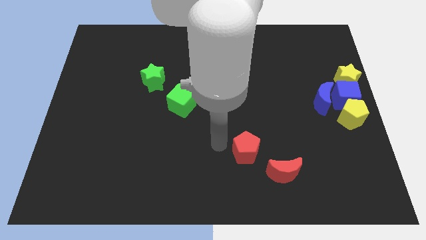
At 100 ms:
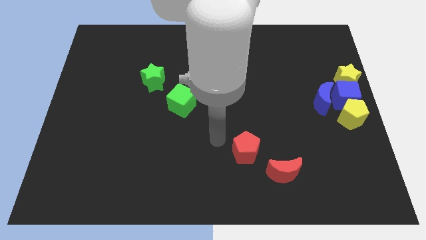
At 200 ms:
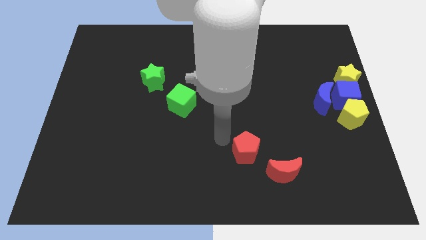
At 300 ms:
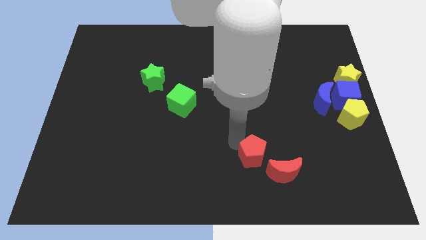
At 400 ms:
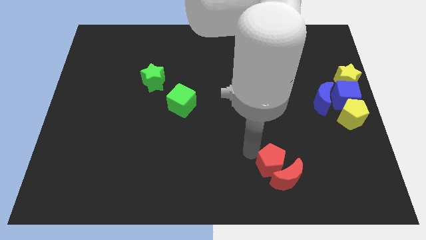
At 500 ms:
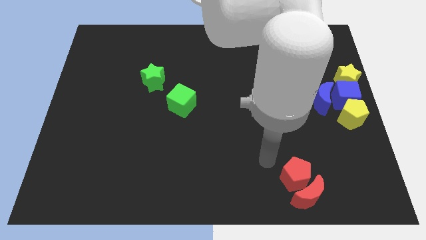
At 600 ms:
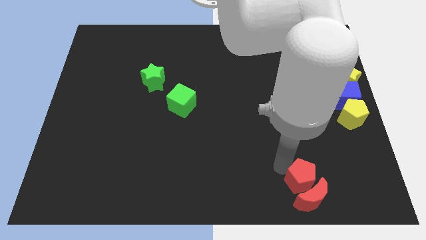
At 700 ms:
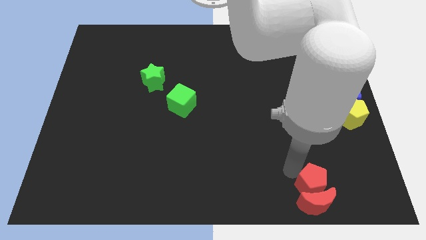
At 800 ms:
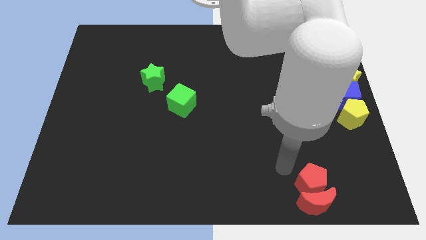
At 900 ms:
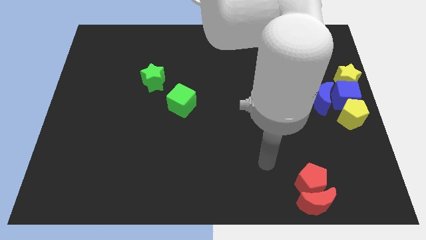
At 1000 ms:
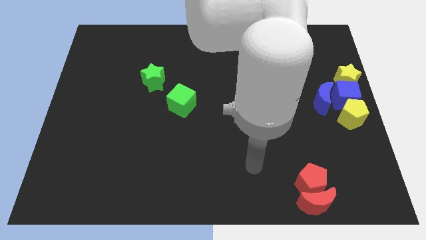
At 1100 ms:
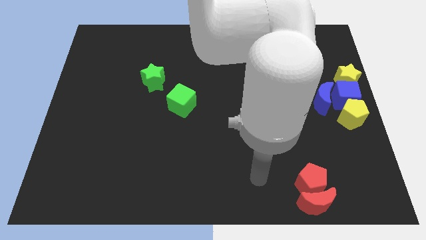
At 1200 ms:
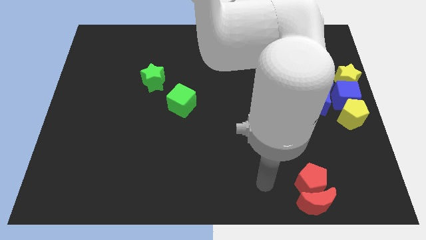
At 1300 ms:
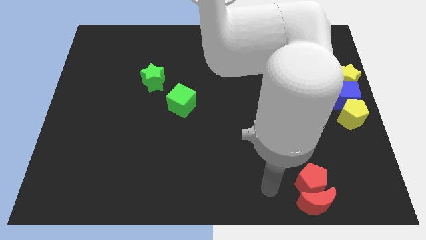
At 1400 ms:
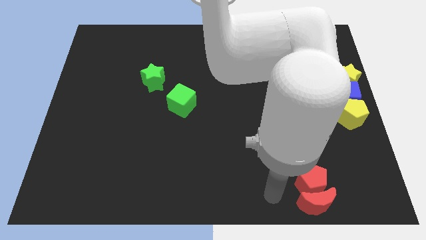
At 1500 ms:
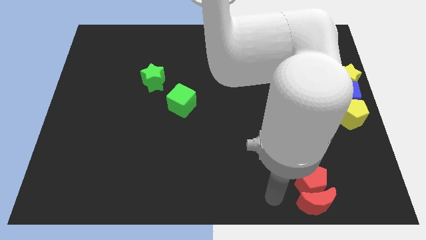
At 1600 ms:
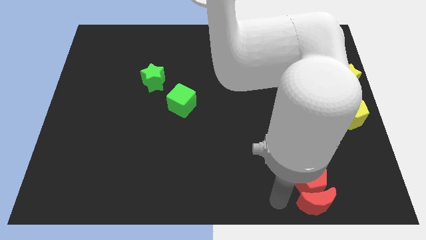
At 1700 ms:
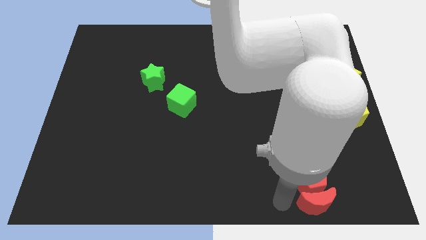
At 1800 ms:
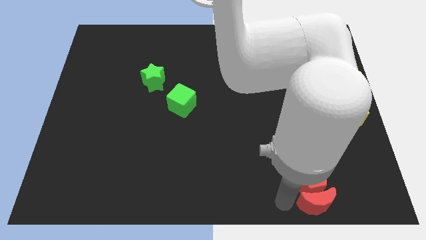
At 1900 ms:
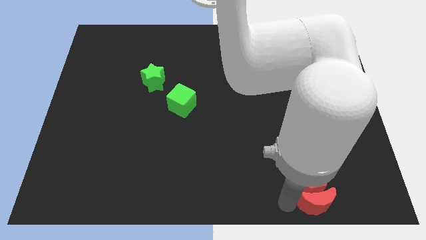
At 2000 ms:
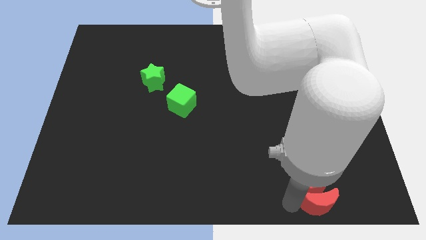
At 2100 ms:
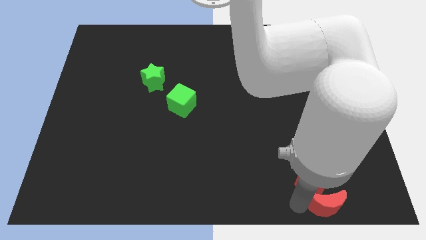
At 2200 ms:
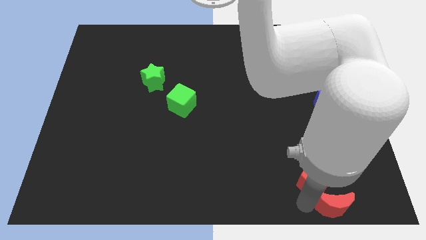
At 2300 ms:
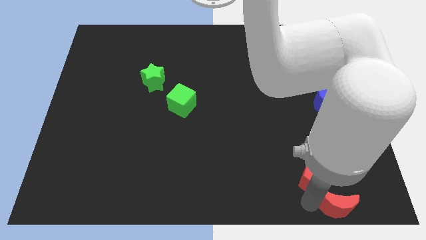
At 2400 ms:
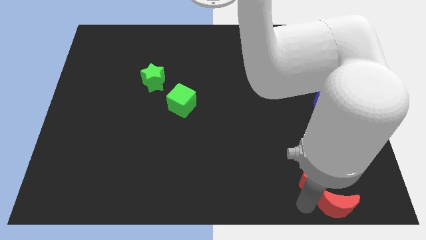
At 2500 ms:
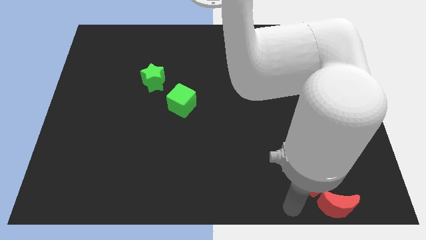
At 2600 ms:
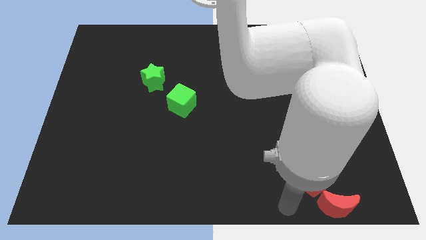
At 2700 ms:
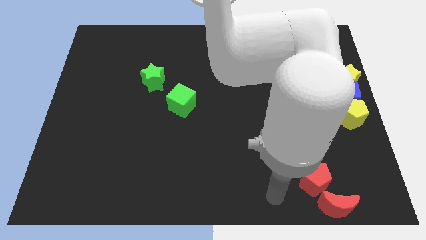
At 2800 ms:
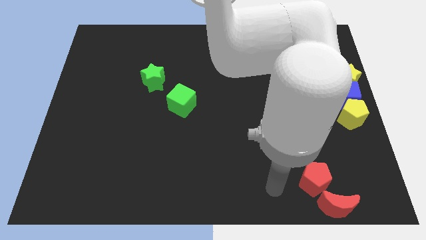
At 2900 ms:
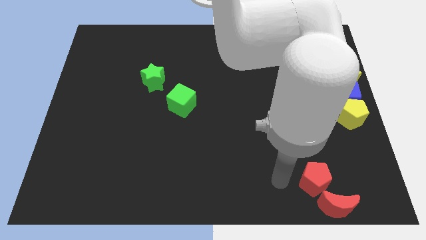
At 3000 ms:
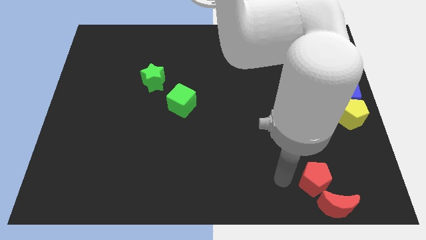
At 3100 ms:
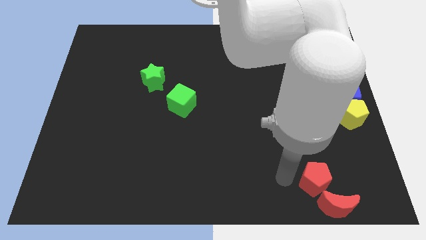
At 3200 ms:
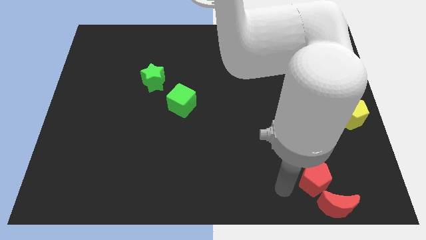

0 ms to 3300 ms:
slide the red blocks to the bottom right side of the board

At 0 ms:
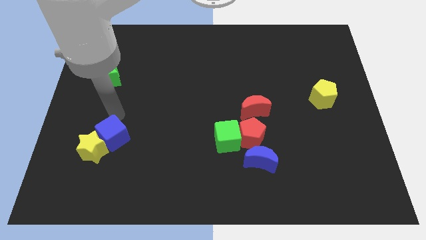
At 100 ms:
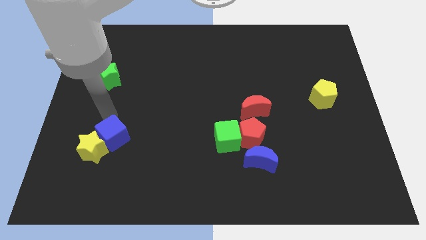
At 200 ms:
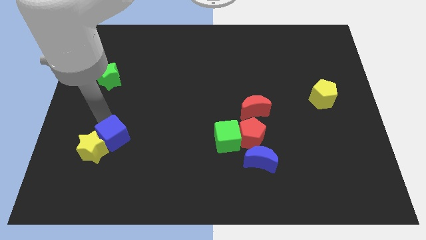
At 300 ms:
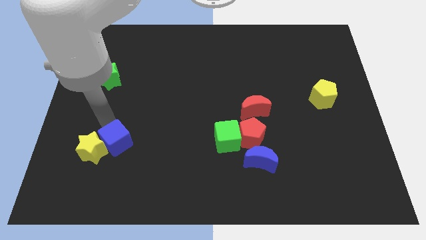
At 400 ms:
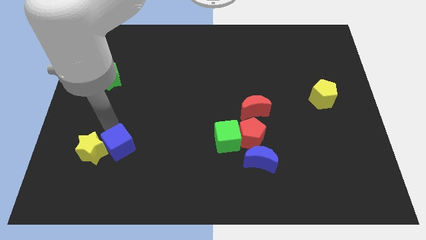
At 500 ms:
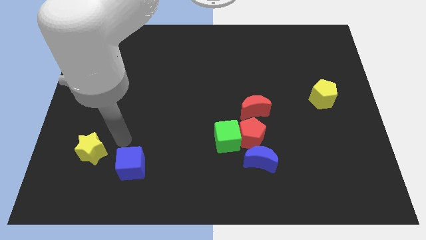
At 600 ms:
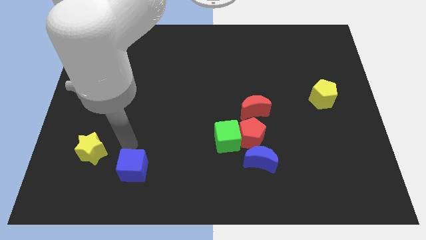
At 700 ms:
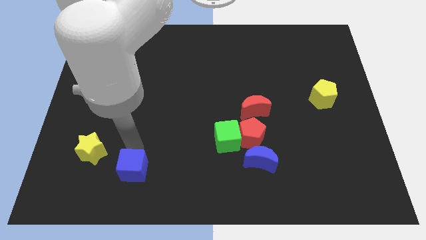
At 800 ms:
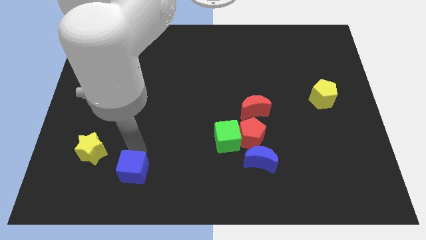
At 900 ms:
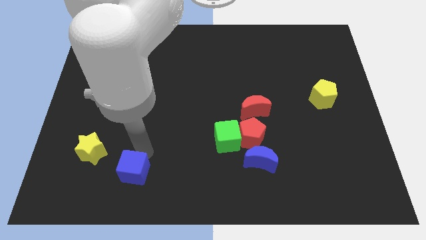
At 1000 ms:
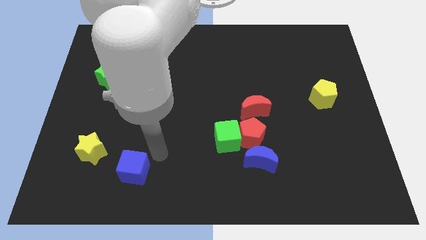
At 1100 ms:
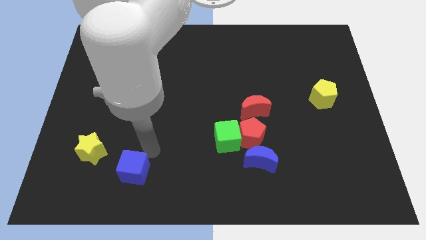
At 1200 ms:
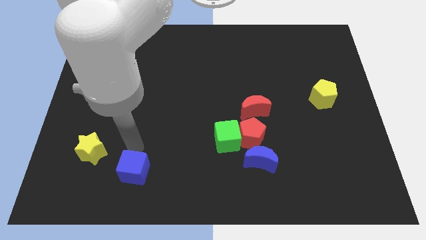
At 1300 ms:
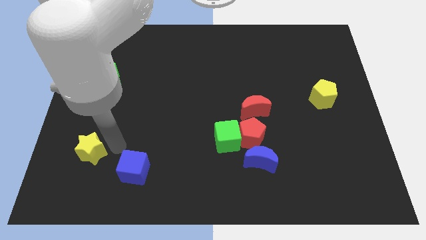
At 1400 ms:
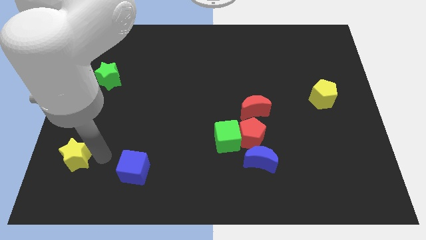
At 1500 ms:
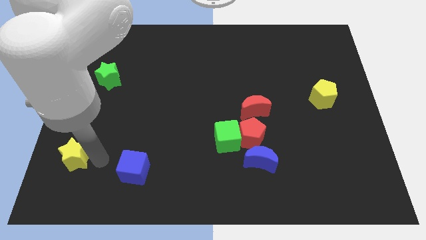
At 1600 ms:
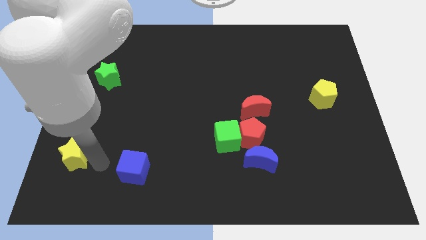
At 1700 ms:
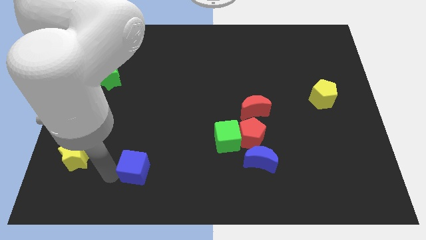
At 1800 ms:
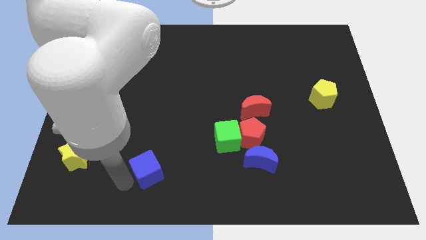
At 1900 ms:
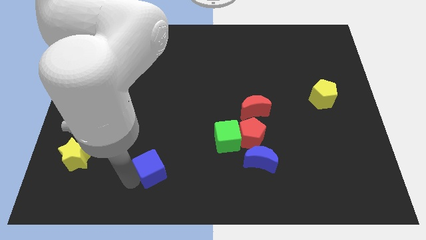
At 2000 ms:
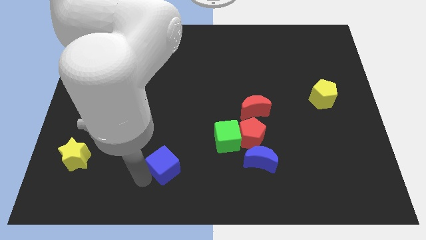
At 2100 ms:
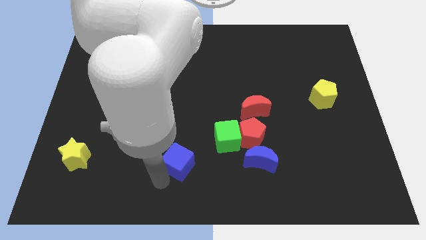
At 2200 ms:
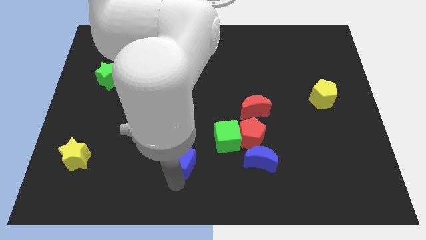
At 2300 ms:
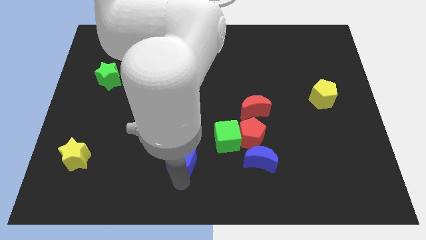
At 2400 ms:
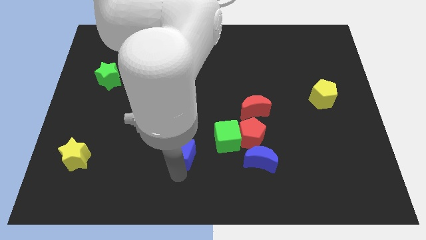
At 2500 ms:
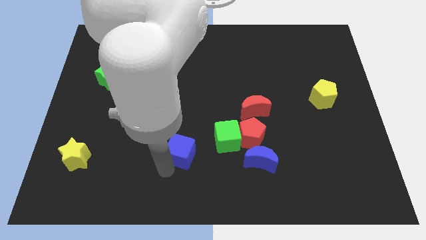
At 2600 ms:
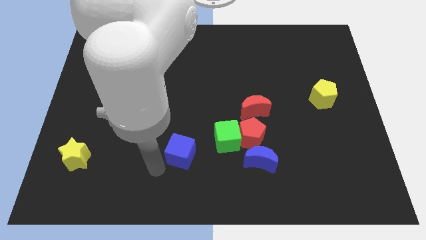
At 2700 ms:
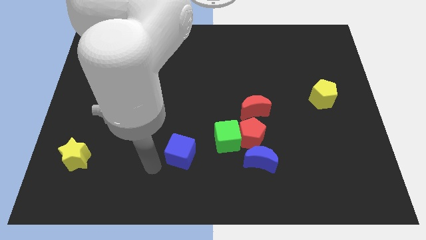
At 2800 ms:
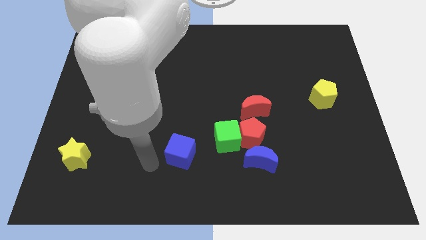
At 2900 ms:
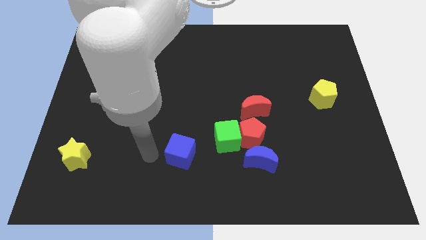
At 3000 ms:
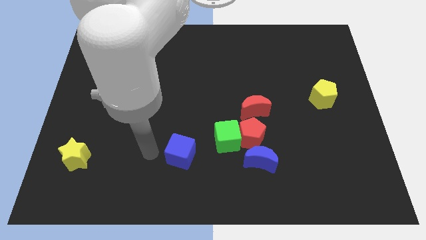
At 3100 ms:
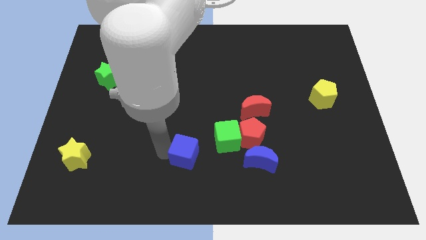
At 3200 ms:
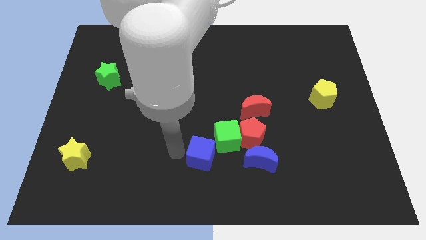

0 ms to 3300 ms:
move blue cube towards green cube

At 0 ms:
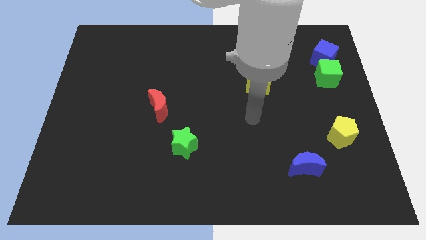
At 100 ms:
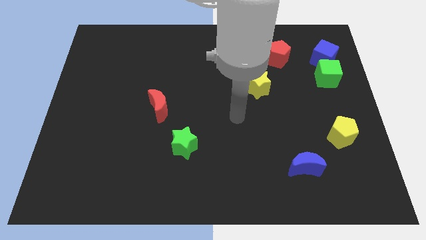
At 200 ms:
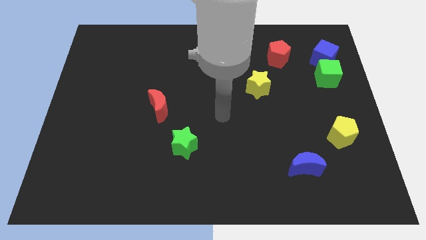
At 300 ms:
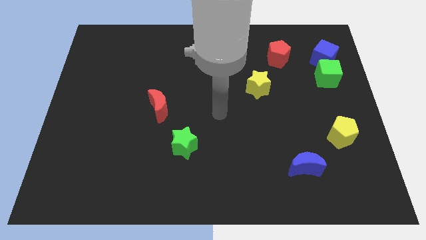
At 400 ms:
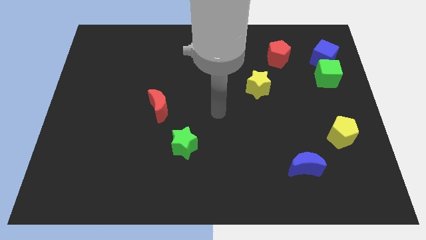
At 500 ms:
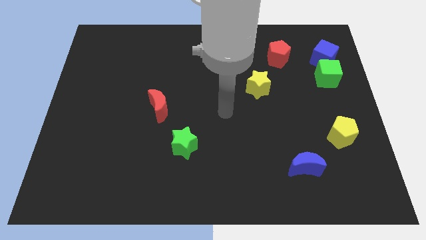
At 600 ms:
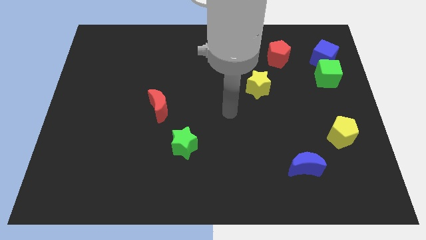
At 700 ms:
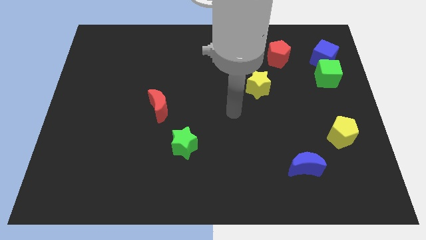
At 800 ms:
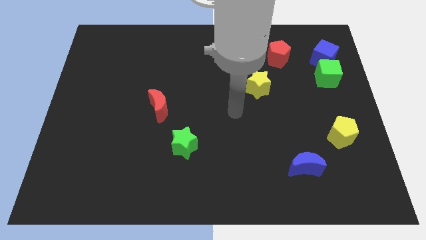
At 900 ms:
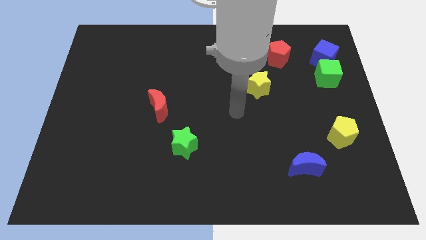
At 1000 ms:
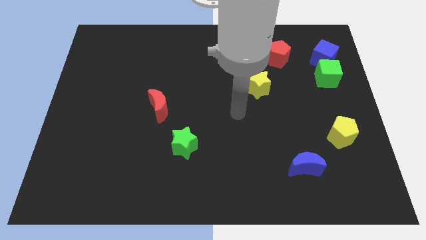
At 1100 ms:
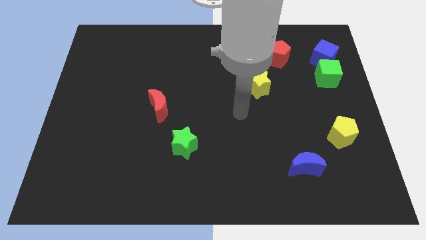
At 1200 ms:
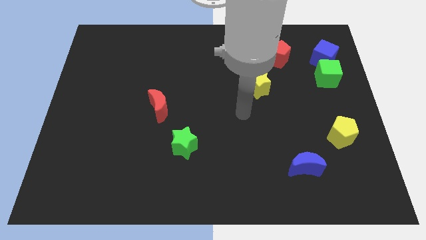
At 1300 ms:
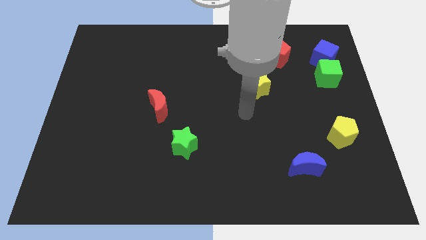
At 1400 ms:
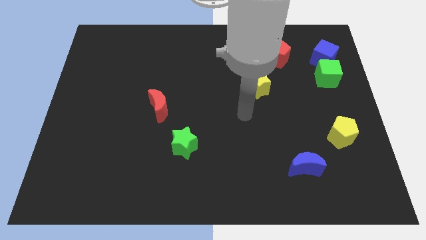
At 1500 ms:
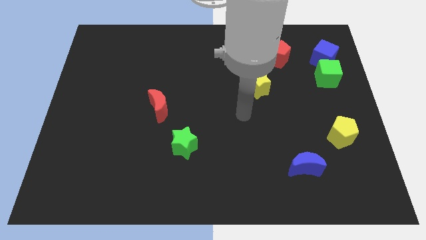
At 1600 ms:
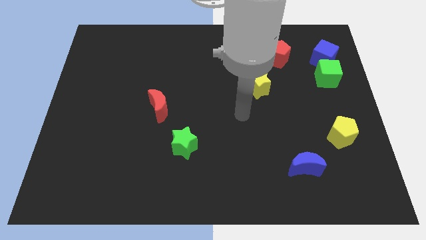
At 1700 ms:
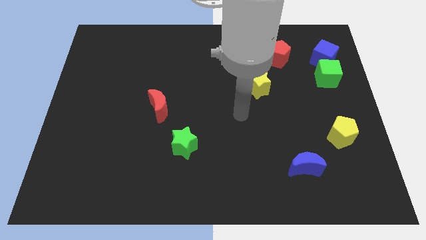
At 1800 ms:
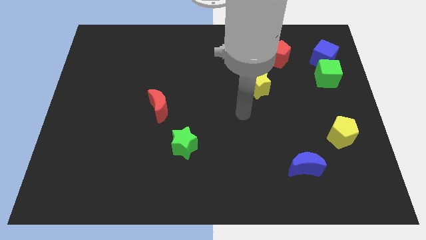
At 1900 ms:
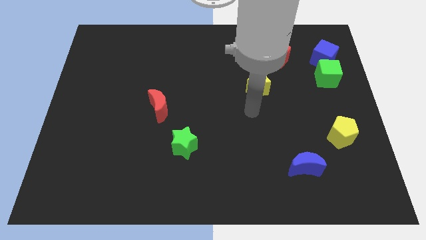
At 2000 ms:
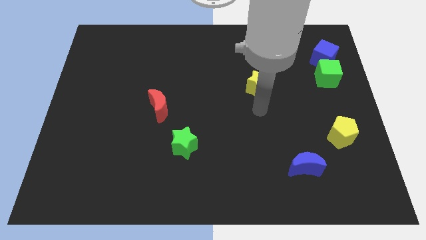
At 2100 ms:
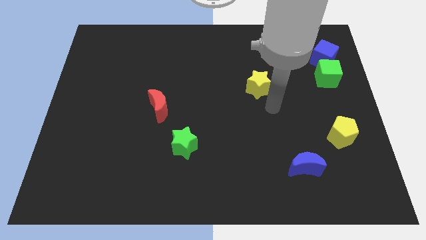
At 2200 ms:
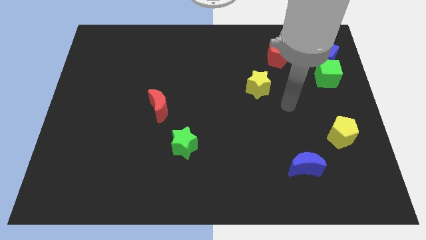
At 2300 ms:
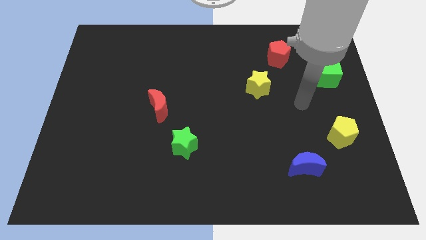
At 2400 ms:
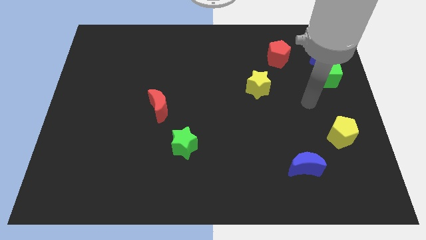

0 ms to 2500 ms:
move your hand towards the center right
